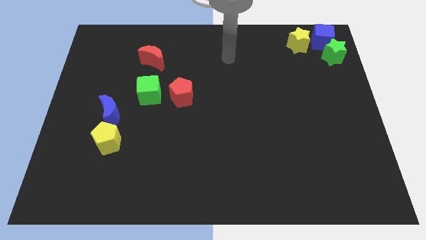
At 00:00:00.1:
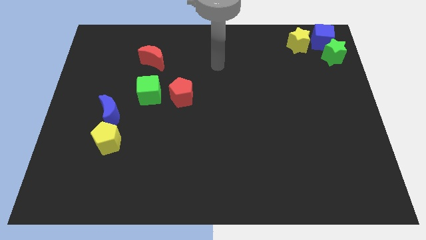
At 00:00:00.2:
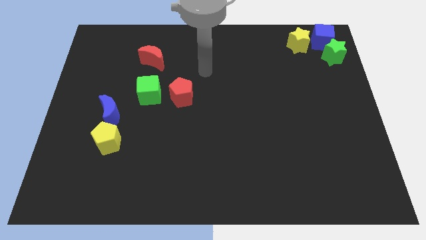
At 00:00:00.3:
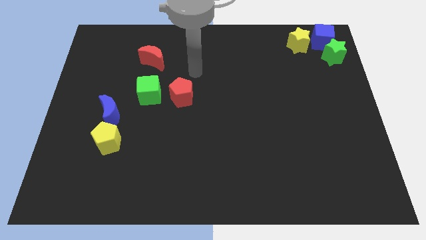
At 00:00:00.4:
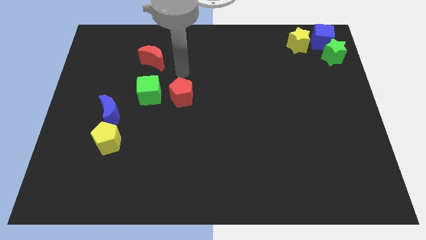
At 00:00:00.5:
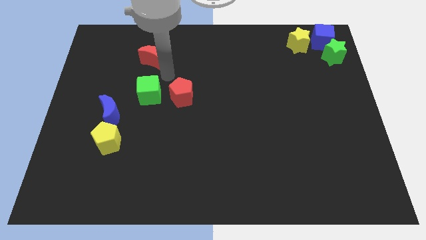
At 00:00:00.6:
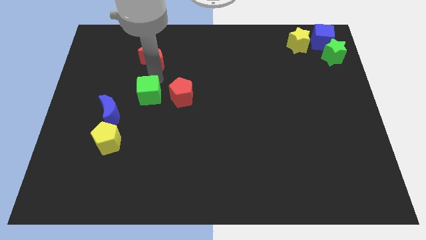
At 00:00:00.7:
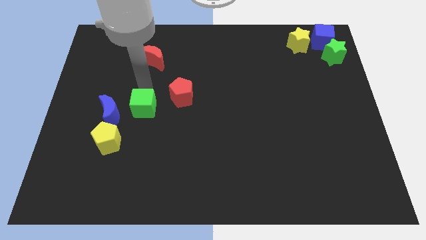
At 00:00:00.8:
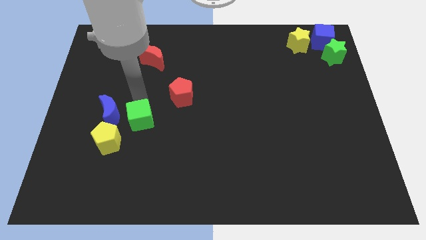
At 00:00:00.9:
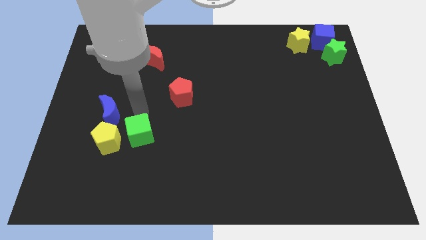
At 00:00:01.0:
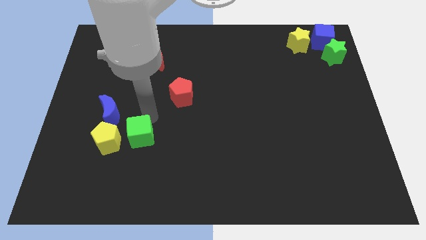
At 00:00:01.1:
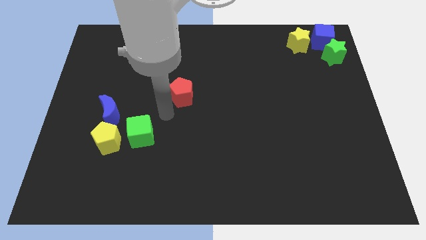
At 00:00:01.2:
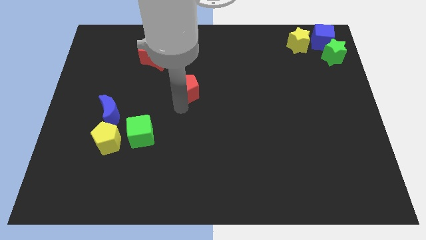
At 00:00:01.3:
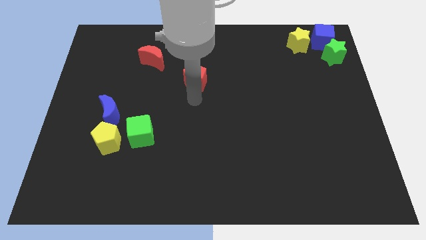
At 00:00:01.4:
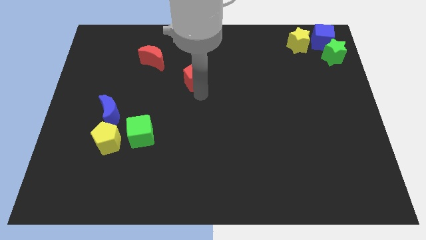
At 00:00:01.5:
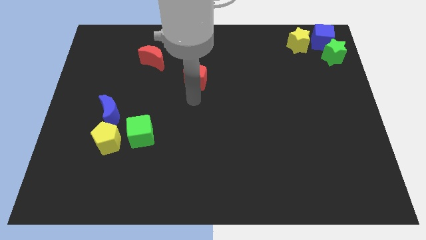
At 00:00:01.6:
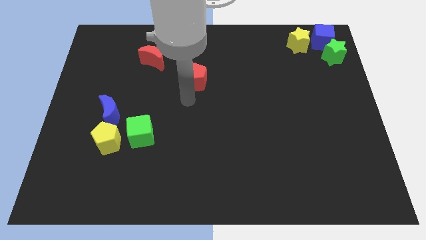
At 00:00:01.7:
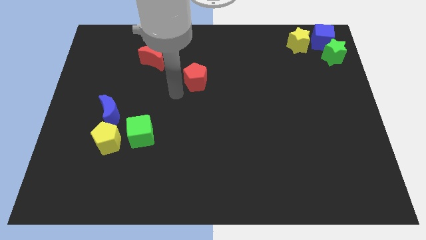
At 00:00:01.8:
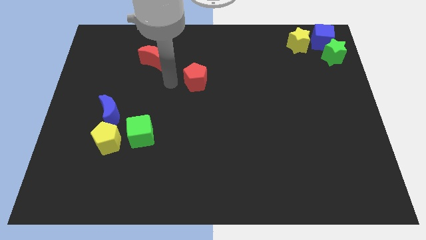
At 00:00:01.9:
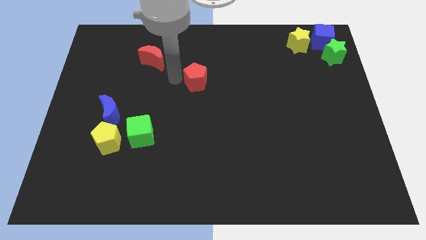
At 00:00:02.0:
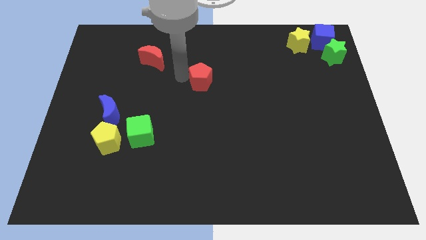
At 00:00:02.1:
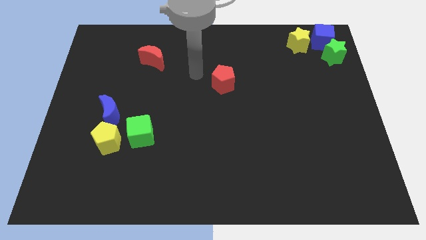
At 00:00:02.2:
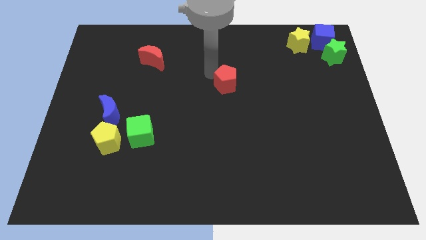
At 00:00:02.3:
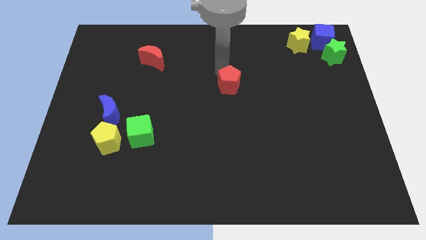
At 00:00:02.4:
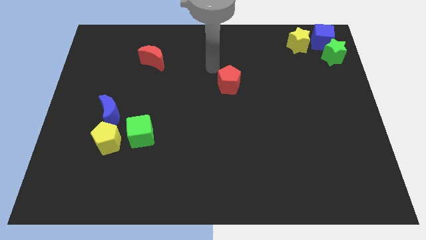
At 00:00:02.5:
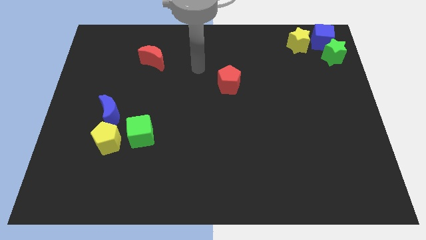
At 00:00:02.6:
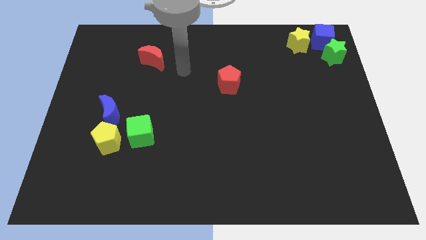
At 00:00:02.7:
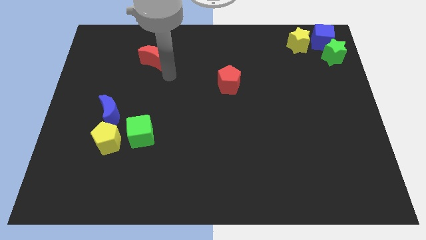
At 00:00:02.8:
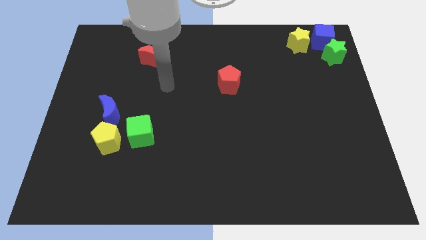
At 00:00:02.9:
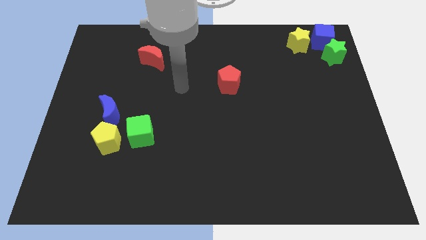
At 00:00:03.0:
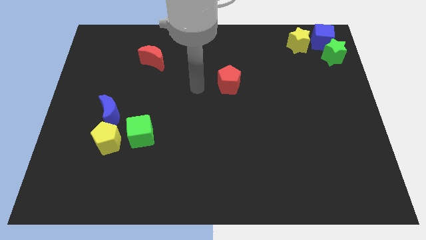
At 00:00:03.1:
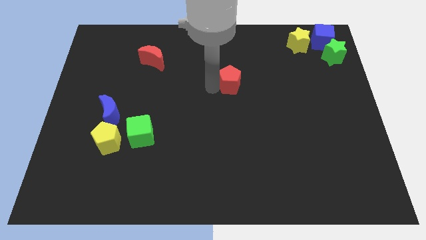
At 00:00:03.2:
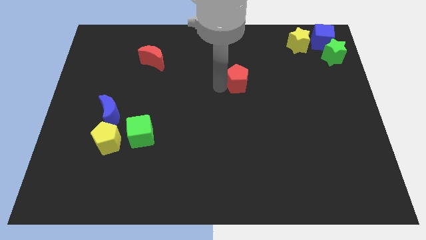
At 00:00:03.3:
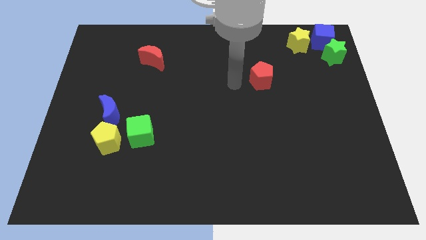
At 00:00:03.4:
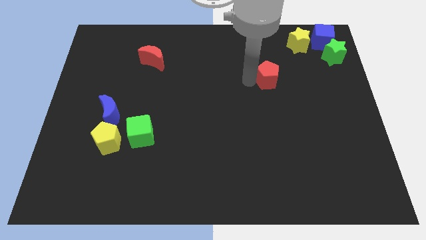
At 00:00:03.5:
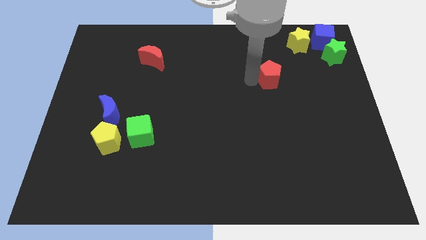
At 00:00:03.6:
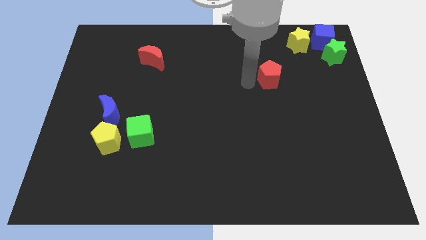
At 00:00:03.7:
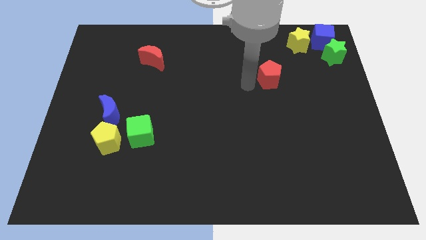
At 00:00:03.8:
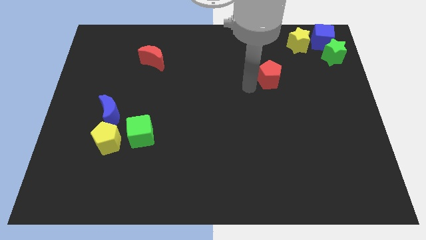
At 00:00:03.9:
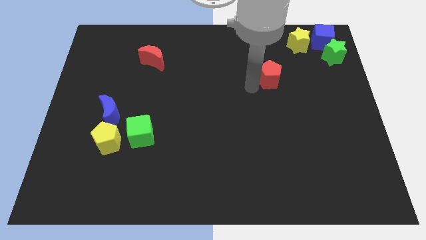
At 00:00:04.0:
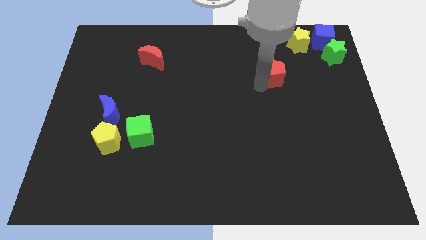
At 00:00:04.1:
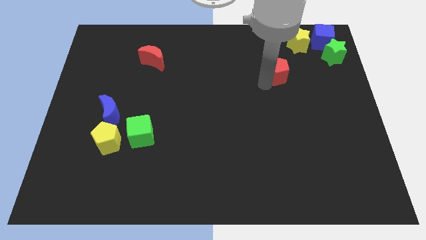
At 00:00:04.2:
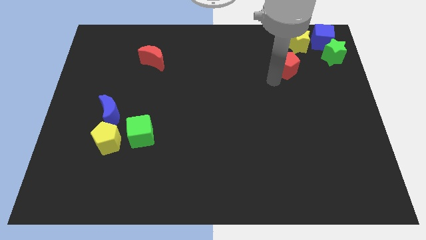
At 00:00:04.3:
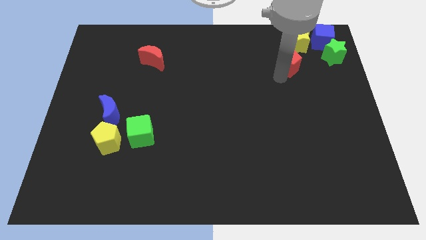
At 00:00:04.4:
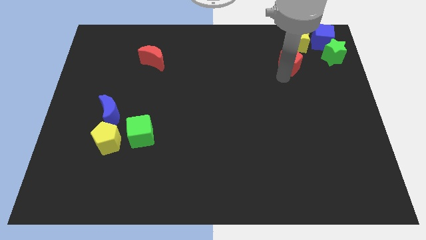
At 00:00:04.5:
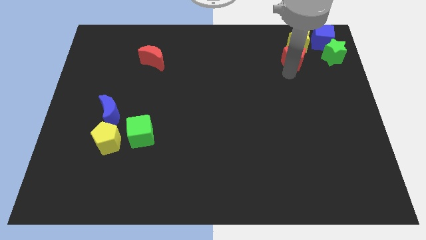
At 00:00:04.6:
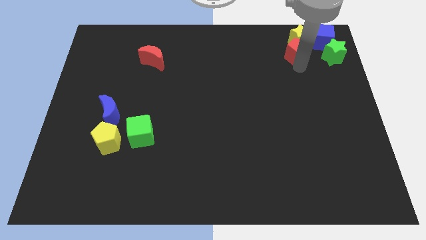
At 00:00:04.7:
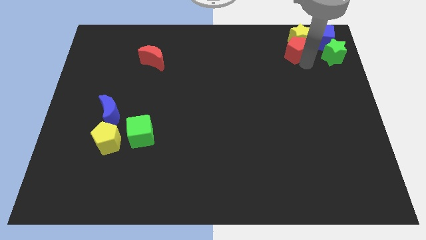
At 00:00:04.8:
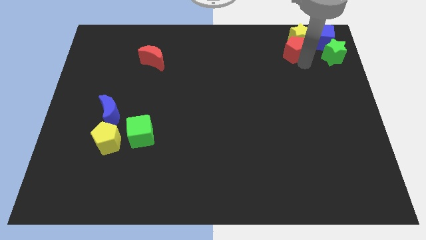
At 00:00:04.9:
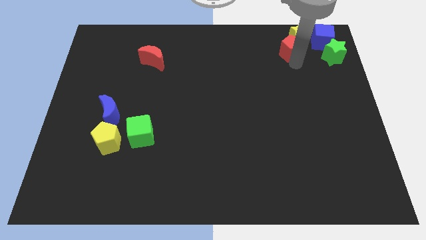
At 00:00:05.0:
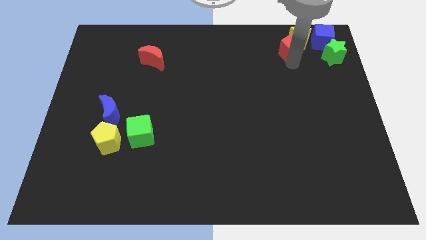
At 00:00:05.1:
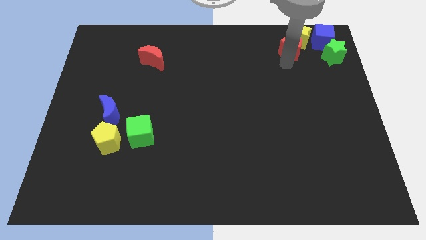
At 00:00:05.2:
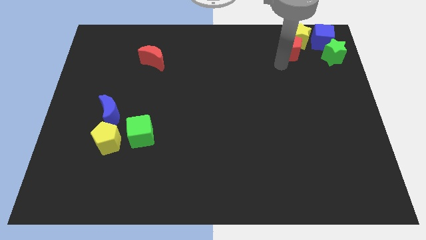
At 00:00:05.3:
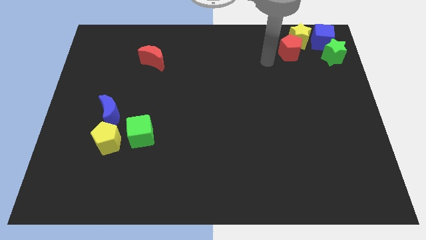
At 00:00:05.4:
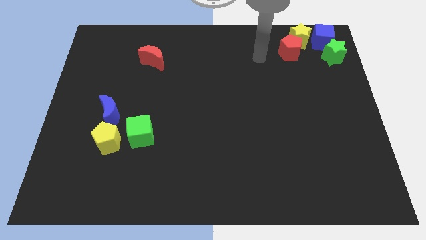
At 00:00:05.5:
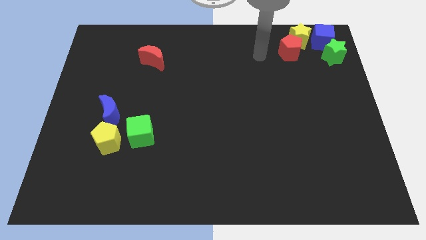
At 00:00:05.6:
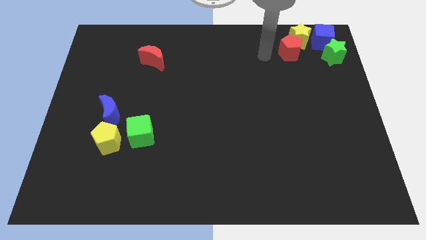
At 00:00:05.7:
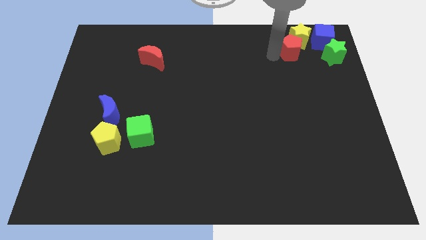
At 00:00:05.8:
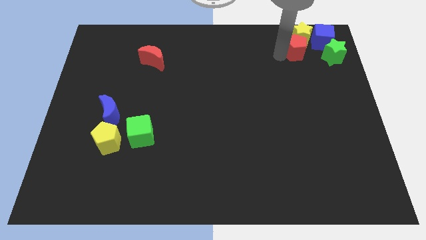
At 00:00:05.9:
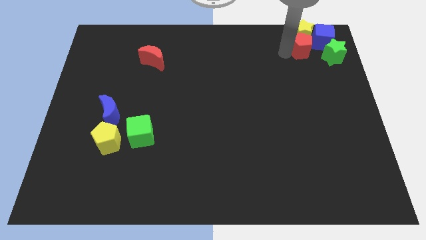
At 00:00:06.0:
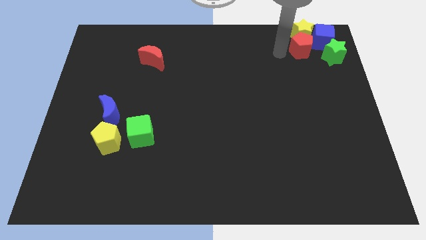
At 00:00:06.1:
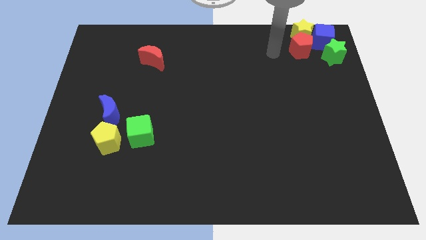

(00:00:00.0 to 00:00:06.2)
move the red crescent towards the top of the blue cube

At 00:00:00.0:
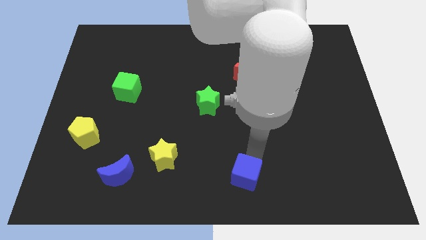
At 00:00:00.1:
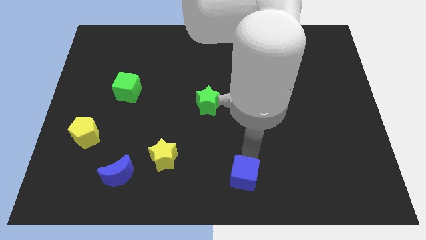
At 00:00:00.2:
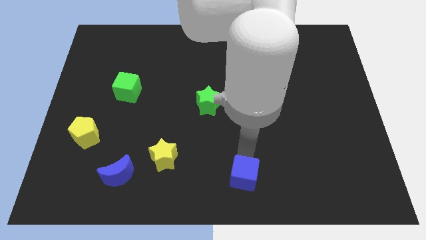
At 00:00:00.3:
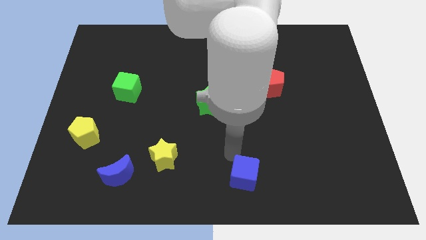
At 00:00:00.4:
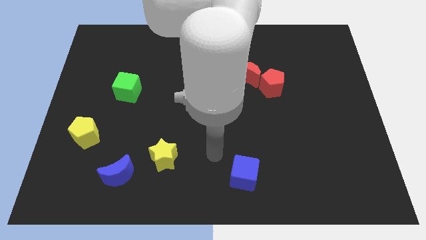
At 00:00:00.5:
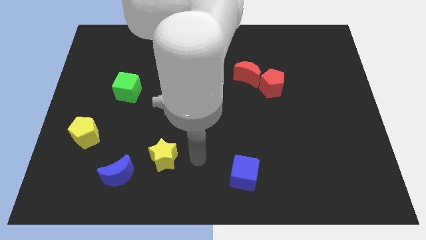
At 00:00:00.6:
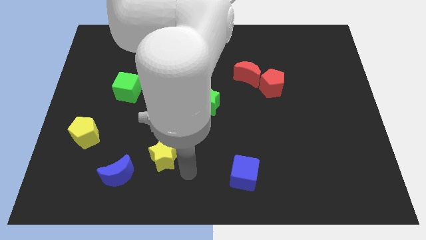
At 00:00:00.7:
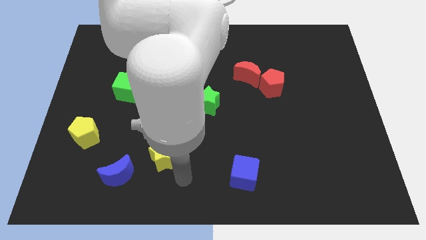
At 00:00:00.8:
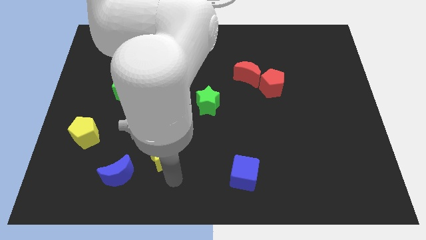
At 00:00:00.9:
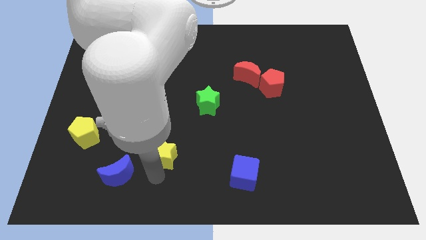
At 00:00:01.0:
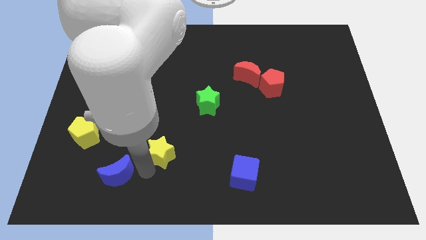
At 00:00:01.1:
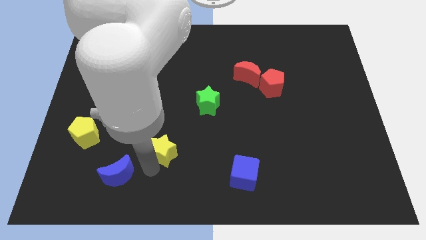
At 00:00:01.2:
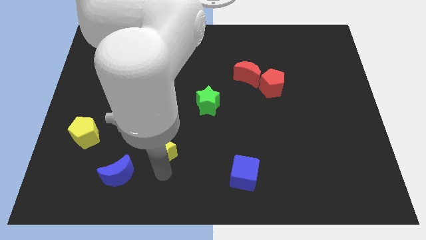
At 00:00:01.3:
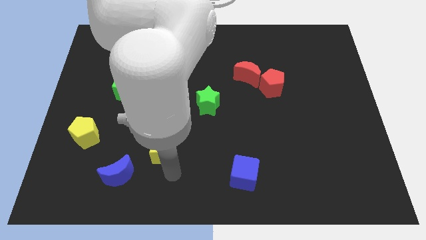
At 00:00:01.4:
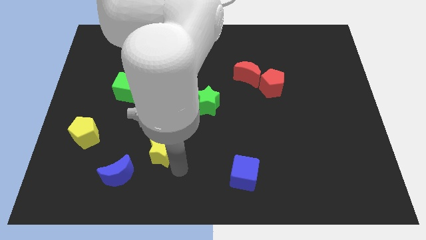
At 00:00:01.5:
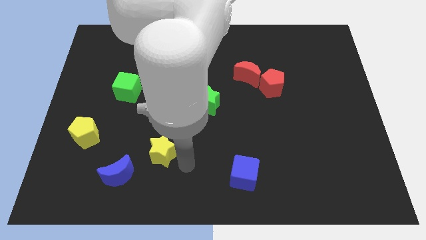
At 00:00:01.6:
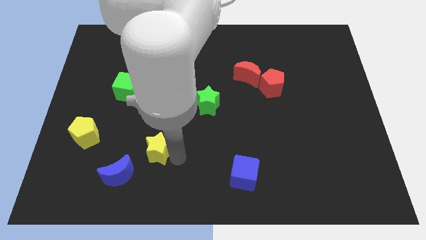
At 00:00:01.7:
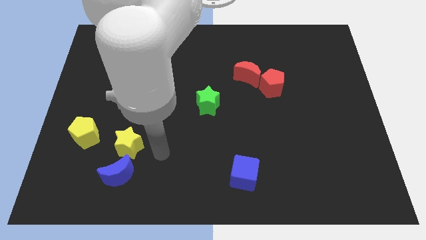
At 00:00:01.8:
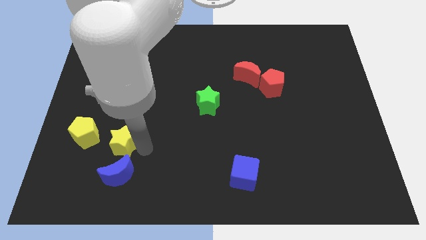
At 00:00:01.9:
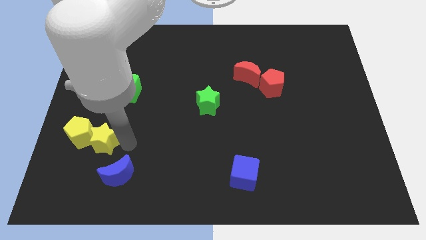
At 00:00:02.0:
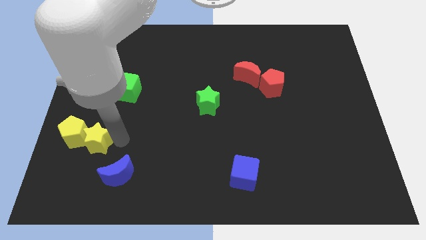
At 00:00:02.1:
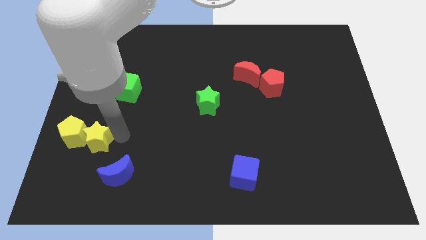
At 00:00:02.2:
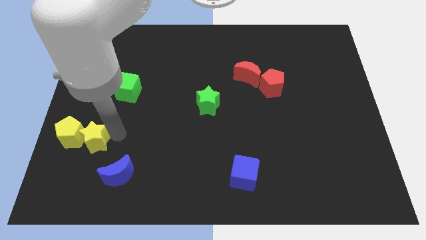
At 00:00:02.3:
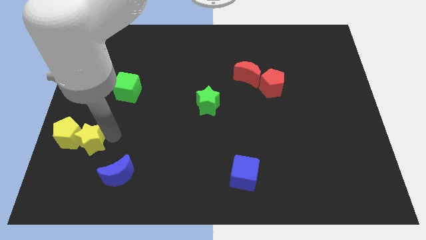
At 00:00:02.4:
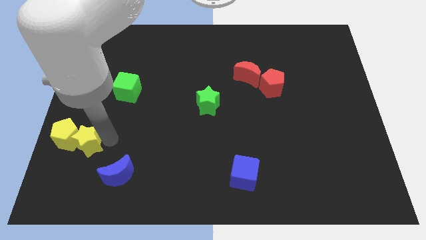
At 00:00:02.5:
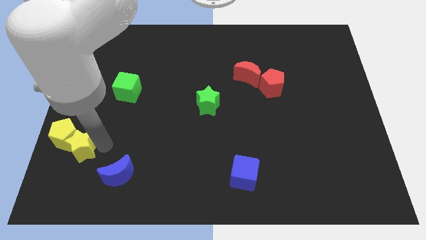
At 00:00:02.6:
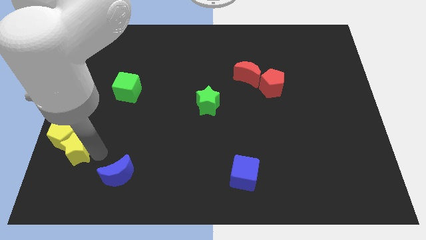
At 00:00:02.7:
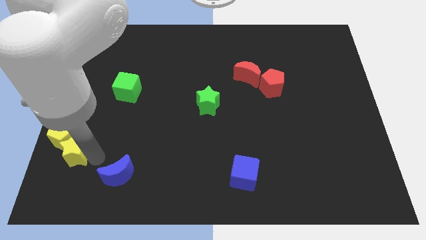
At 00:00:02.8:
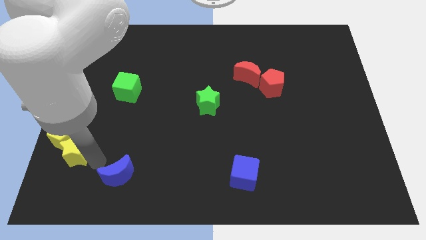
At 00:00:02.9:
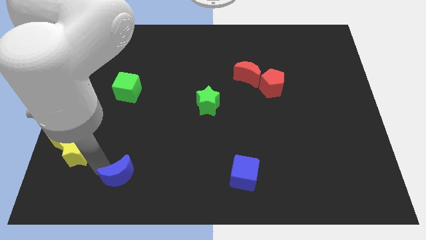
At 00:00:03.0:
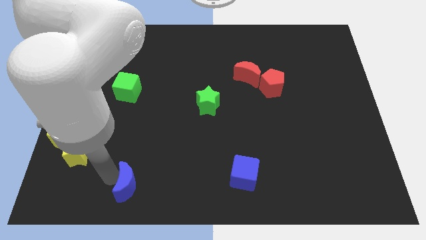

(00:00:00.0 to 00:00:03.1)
push the yellow star into the yellow pentagon to left of the board
